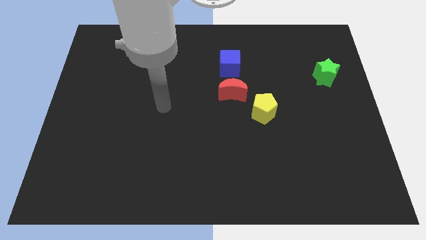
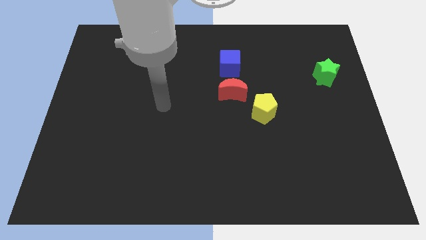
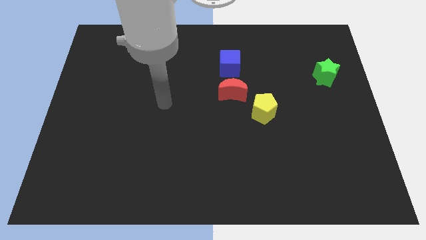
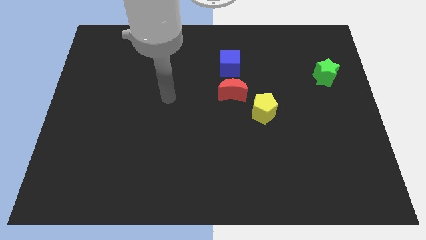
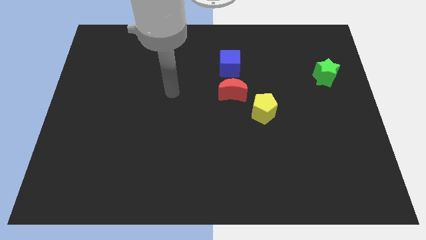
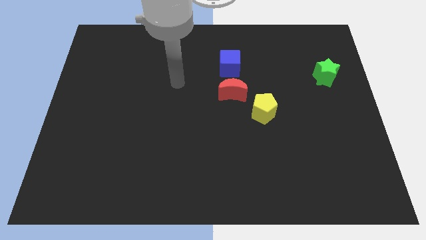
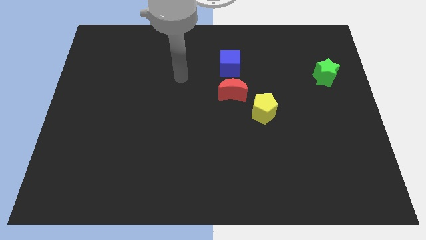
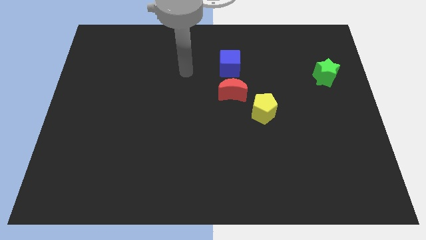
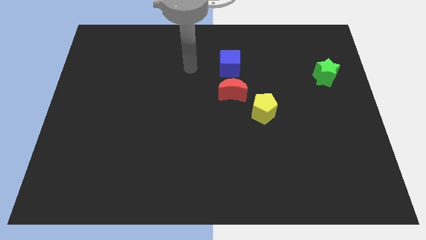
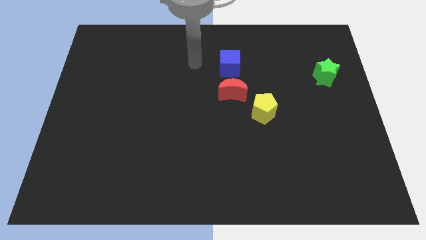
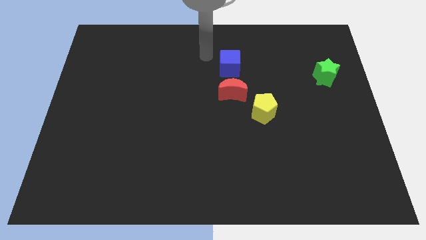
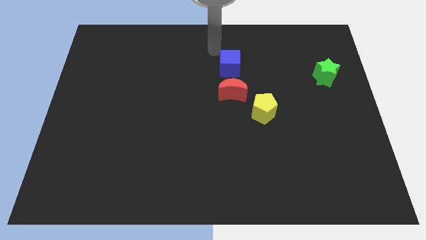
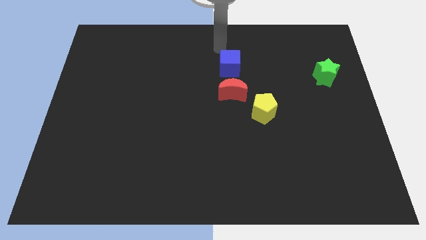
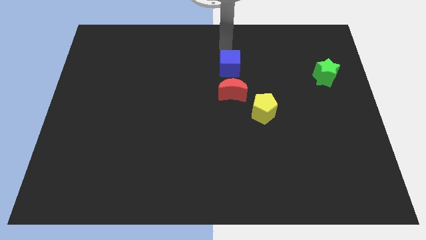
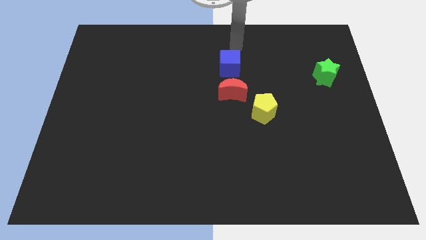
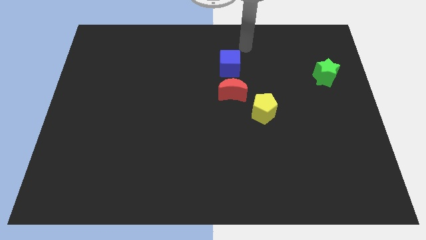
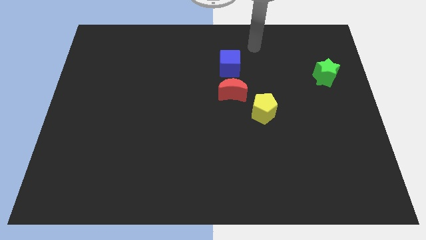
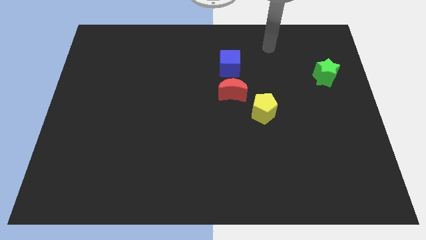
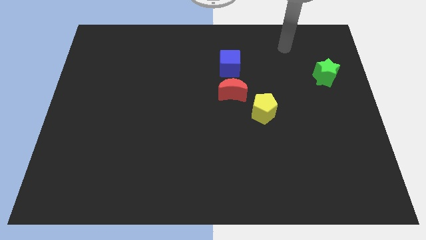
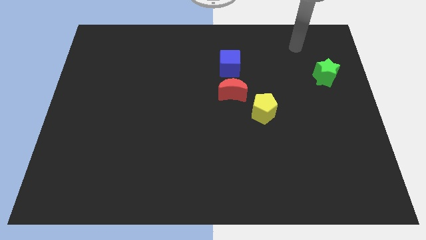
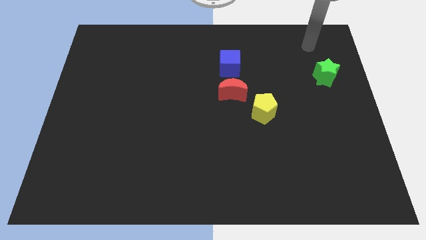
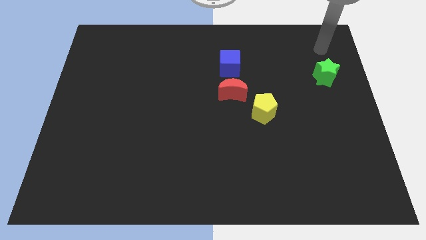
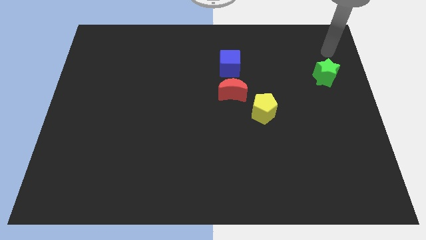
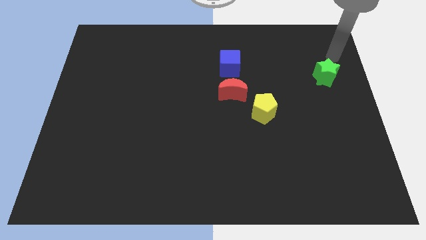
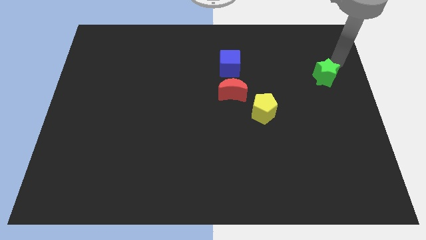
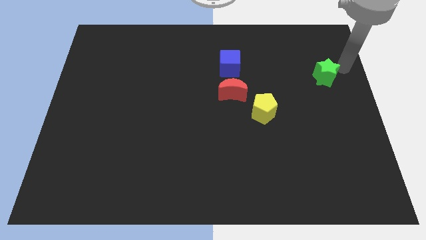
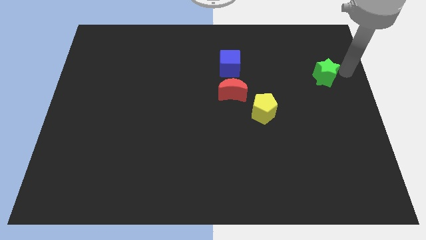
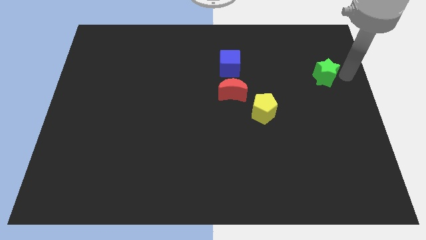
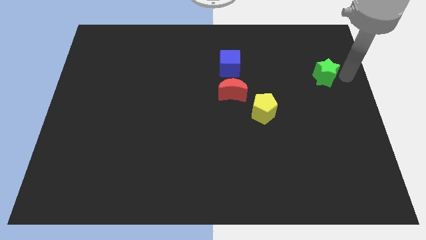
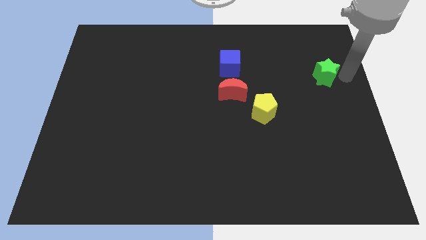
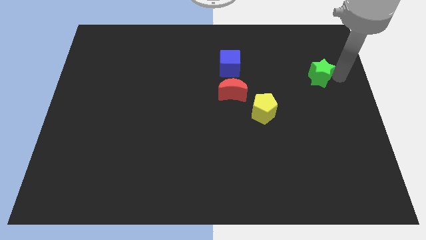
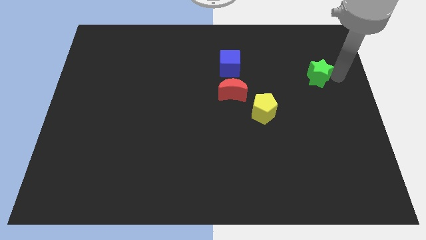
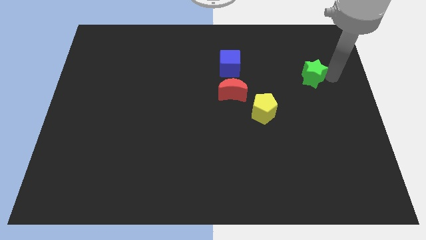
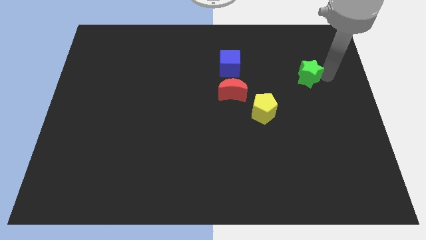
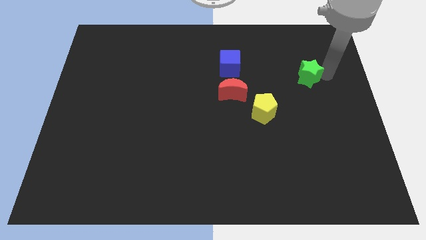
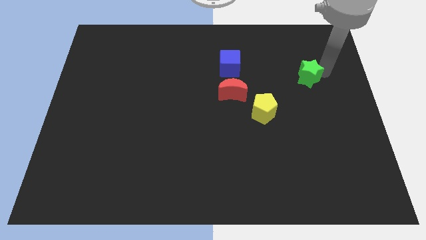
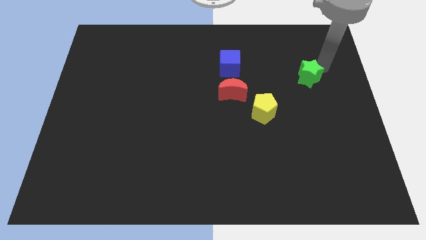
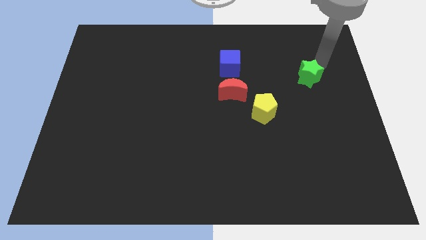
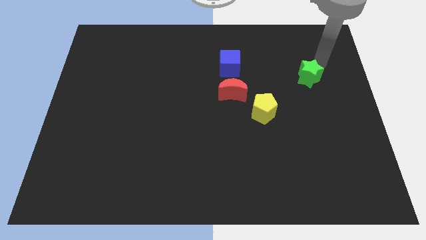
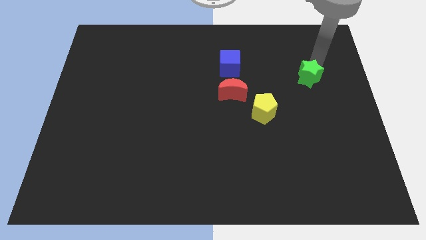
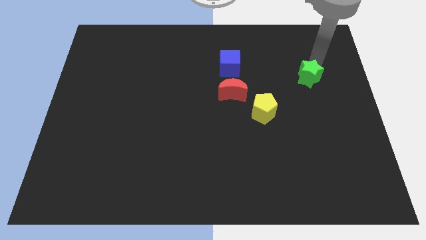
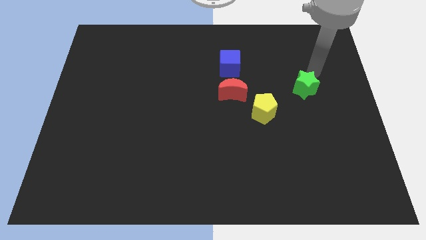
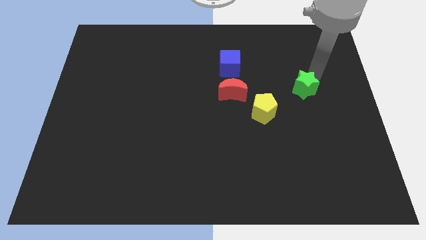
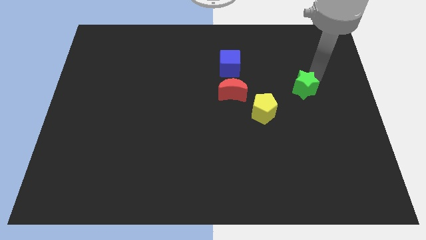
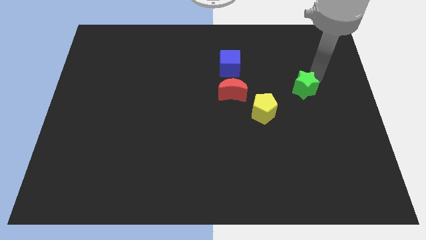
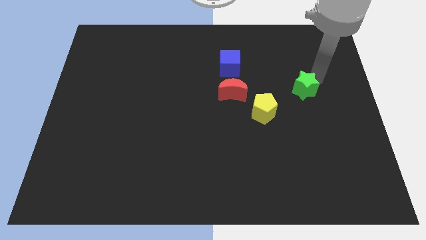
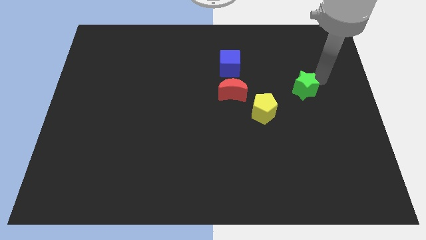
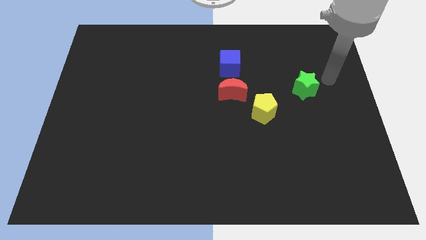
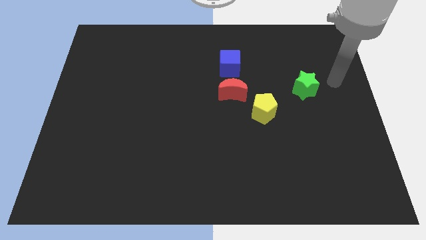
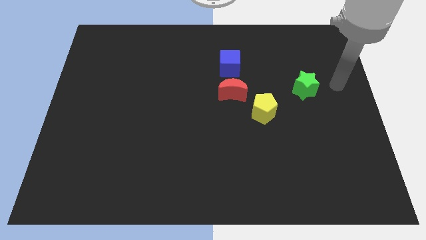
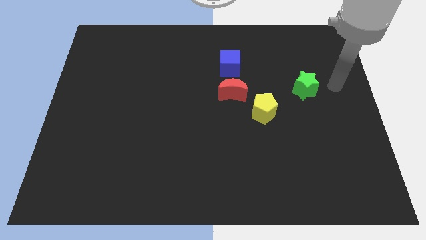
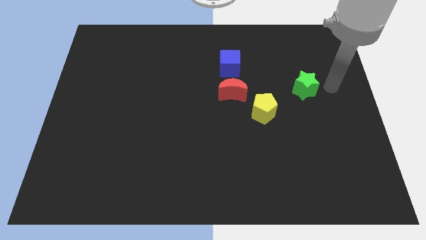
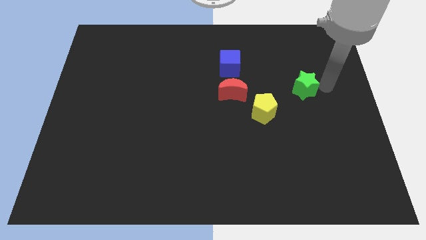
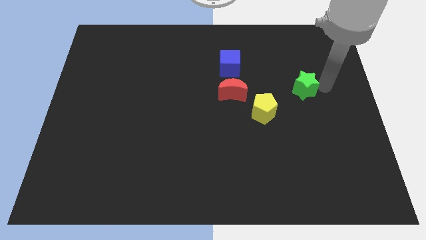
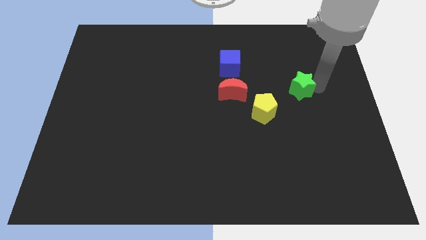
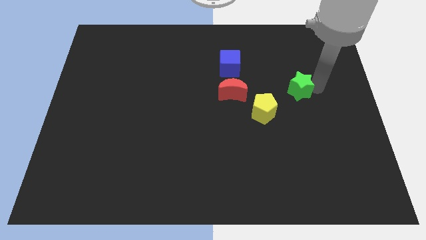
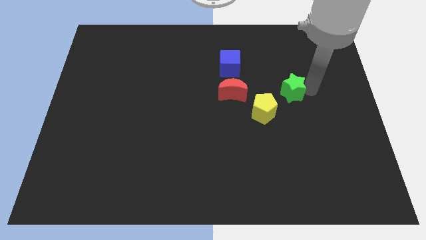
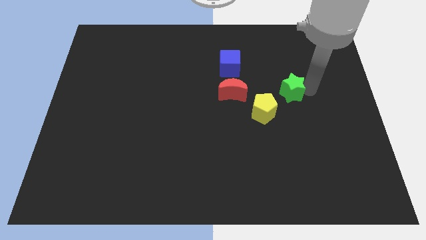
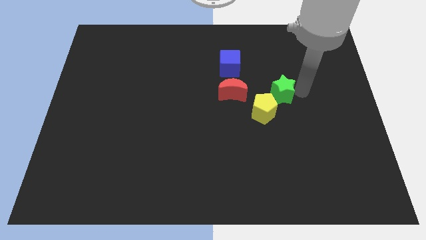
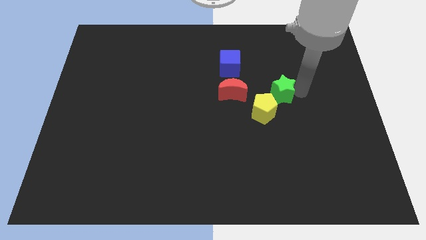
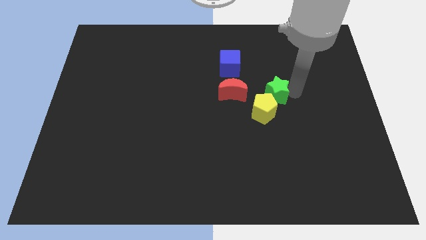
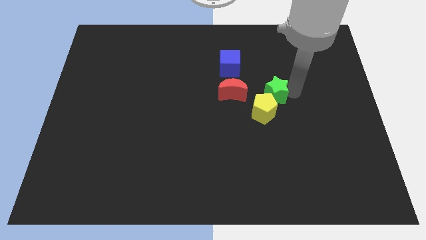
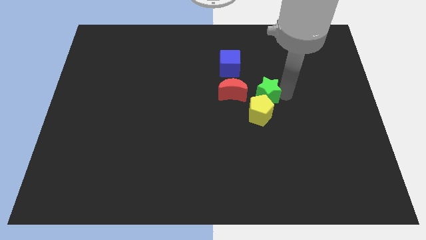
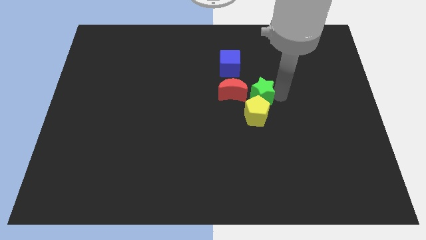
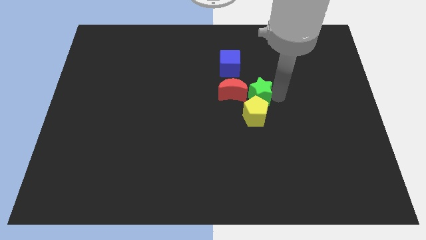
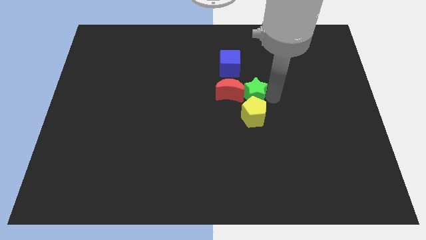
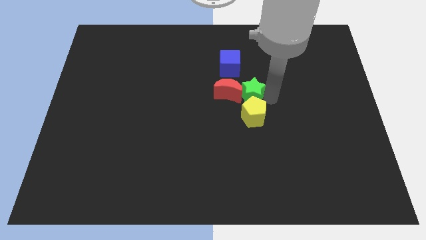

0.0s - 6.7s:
slide the green block next to the red block

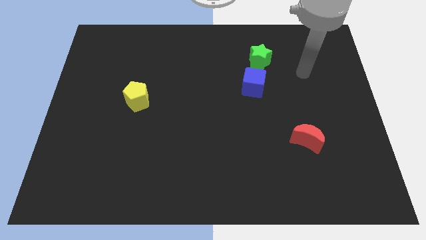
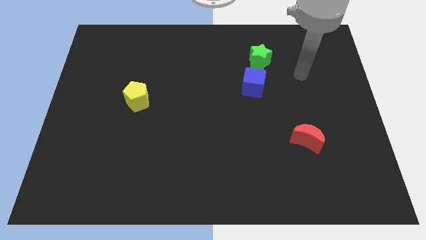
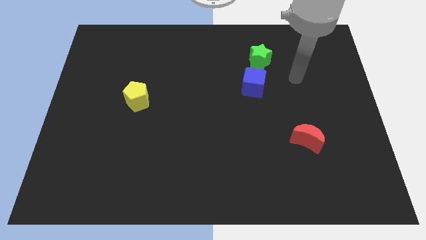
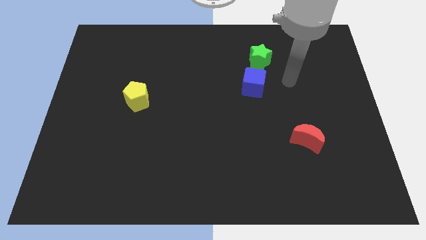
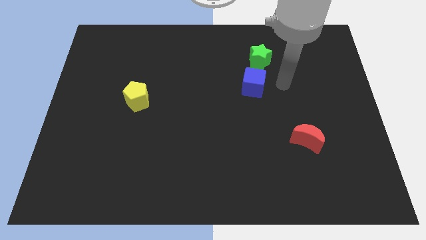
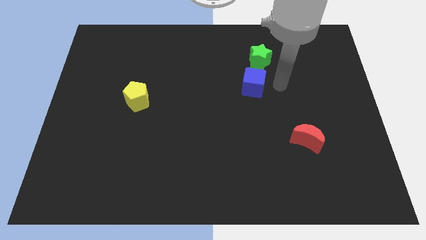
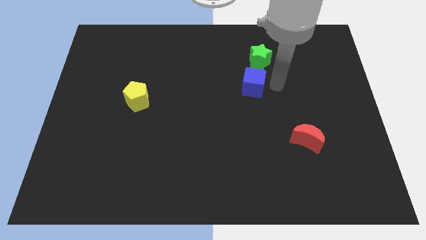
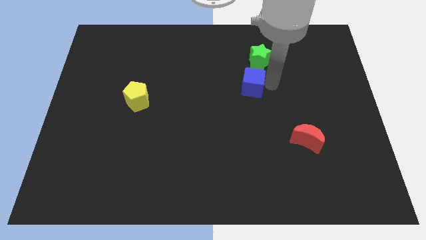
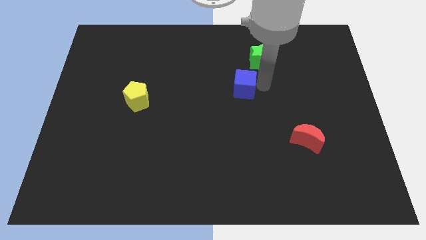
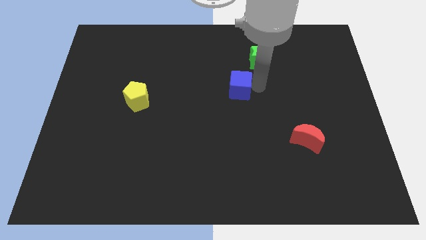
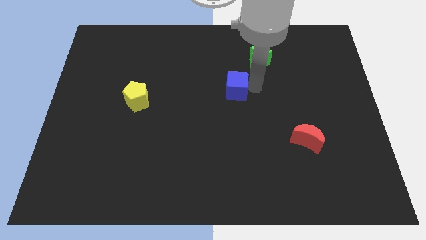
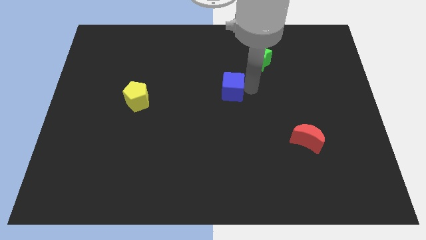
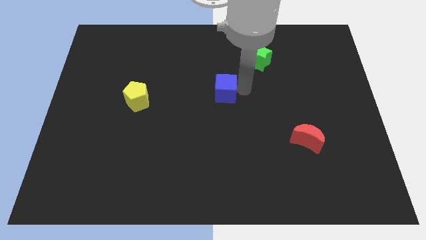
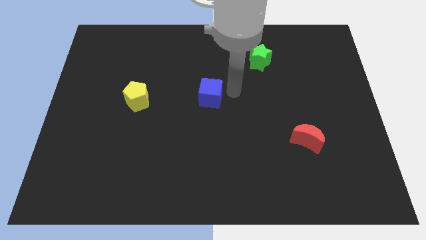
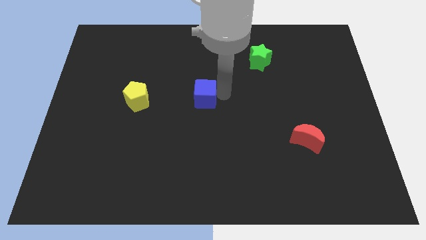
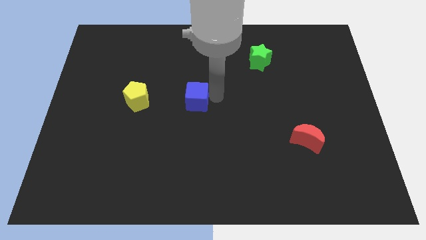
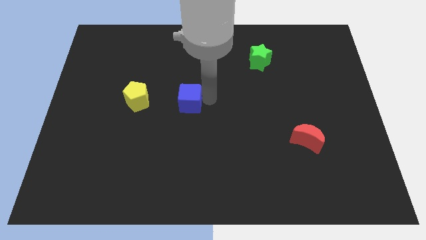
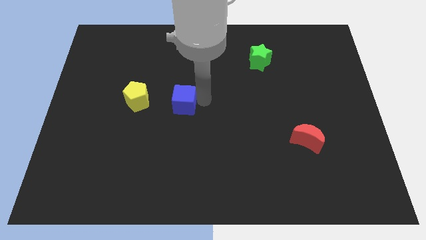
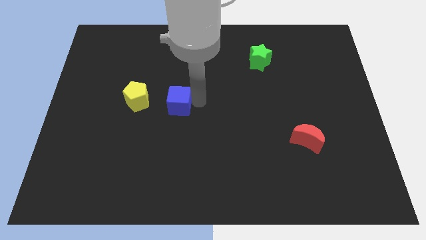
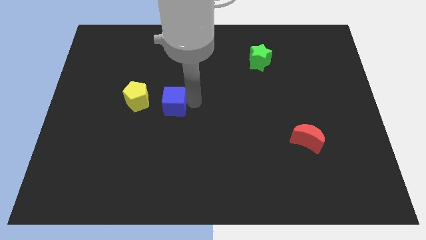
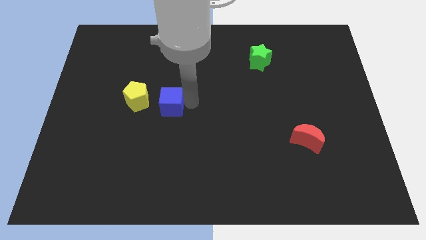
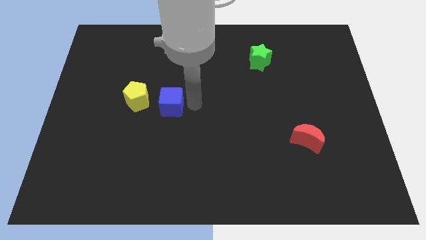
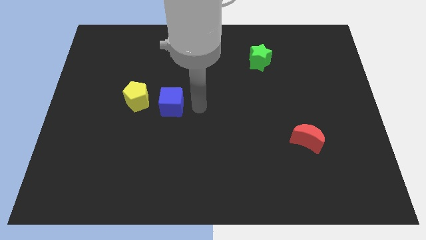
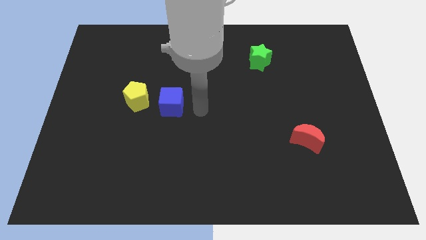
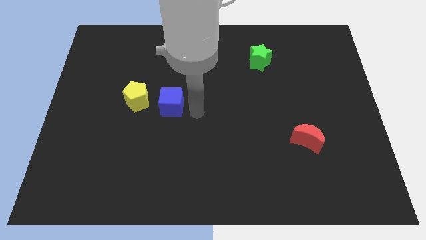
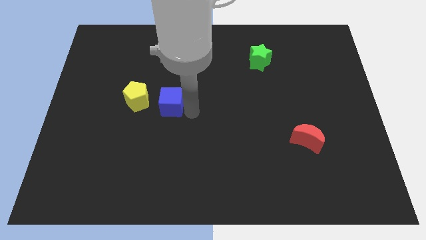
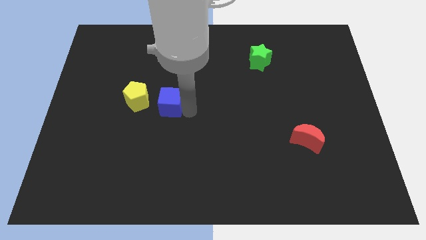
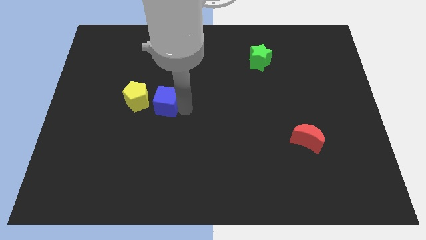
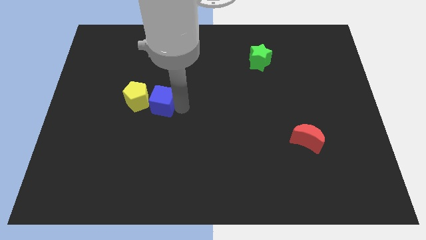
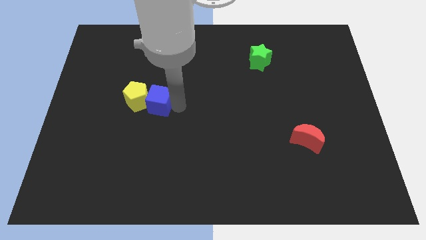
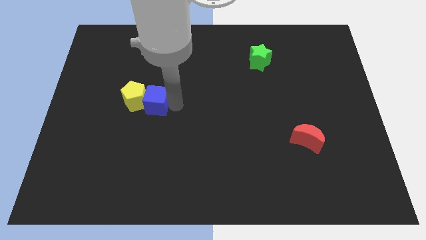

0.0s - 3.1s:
slide the cube close to the yellow pentagon
